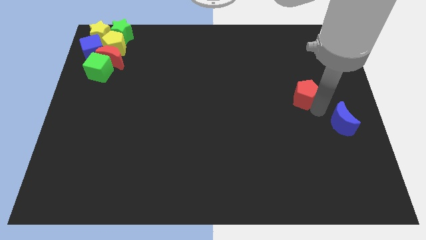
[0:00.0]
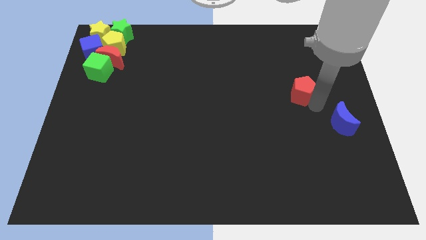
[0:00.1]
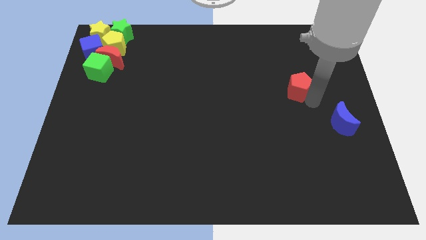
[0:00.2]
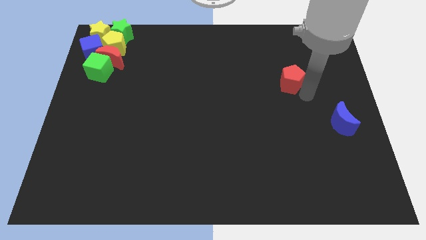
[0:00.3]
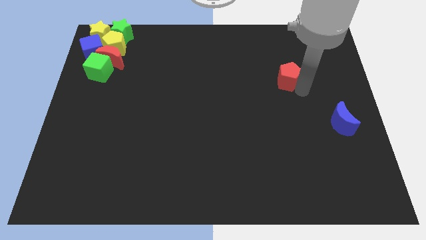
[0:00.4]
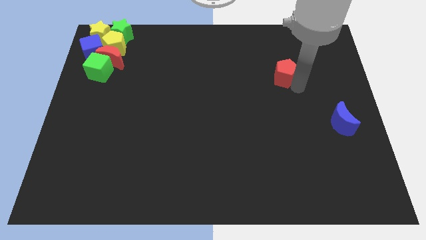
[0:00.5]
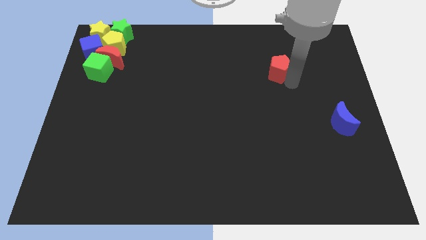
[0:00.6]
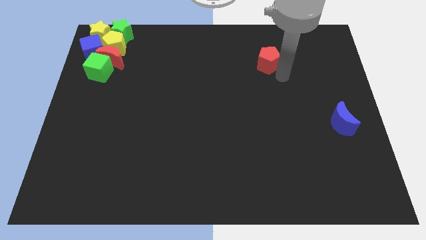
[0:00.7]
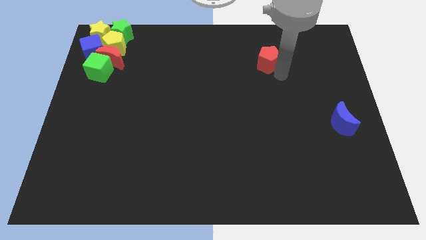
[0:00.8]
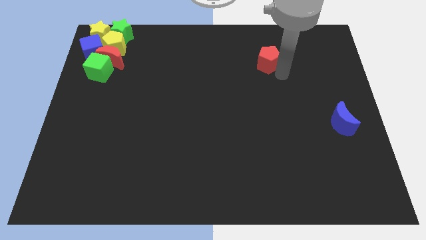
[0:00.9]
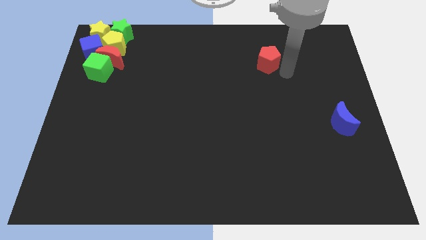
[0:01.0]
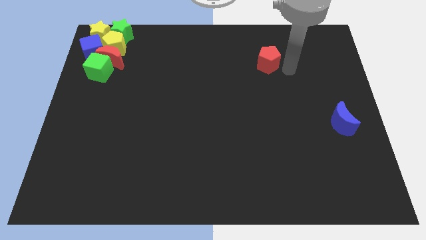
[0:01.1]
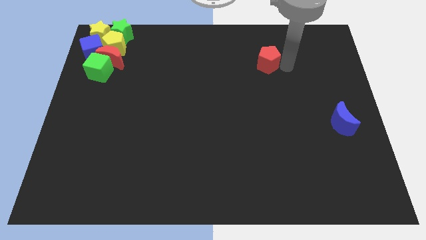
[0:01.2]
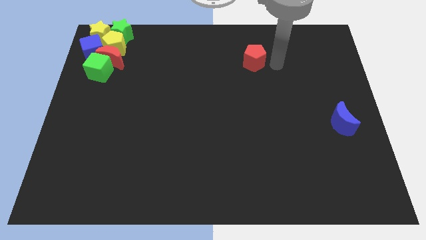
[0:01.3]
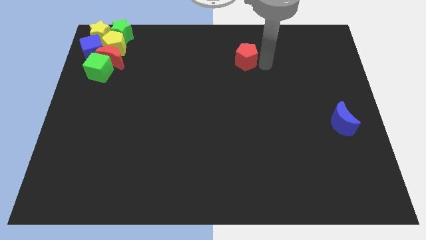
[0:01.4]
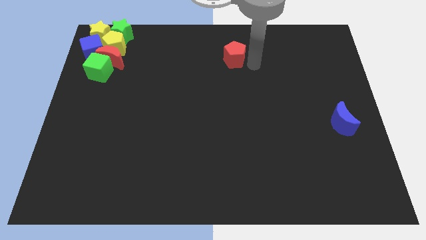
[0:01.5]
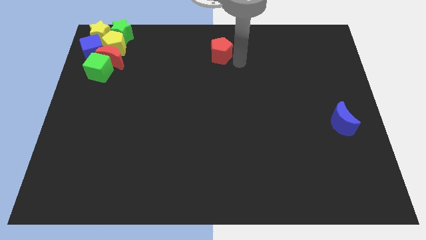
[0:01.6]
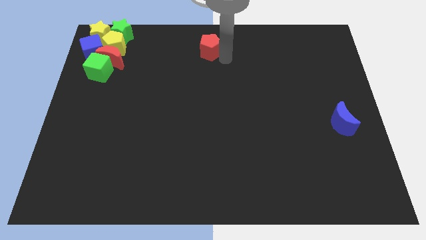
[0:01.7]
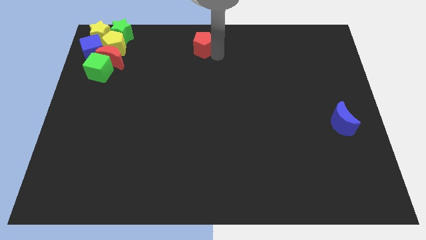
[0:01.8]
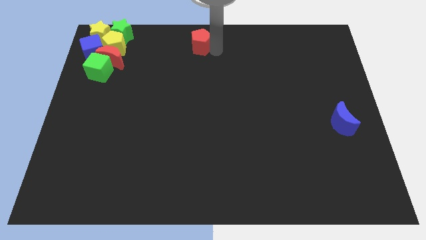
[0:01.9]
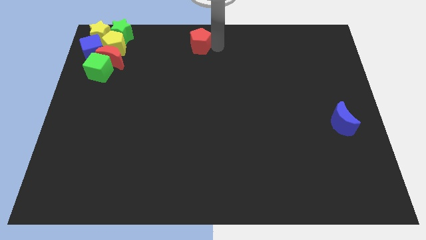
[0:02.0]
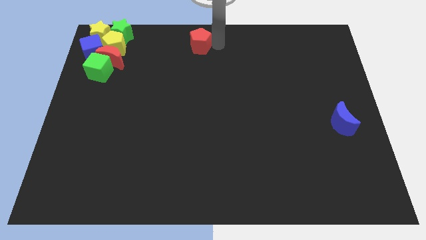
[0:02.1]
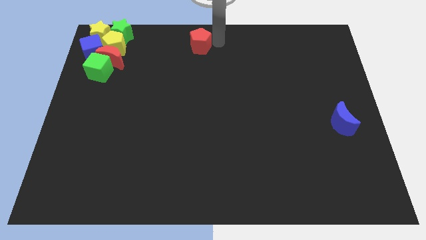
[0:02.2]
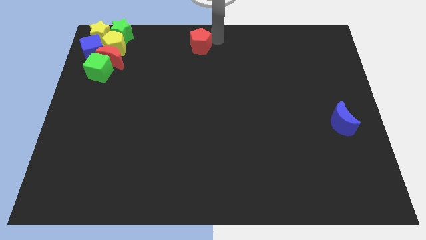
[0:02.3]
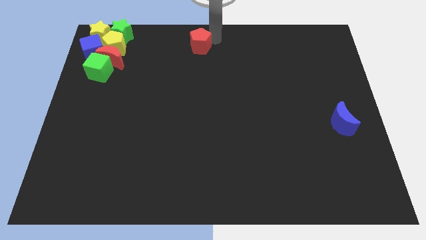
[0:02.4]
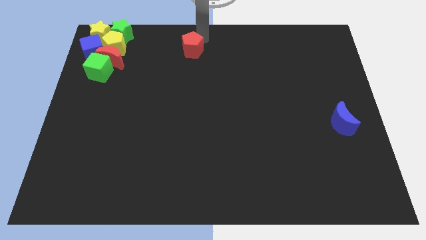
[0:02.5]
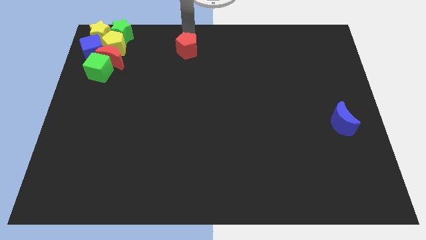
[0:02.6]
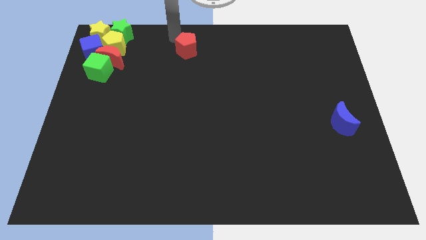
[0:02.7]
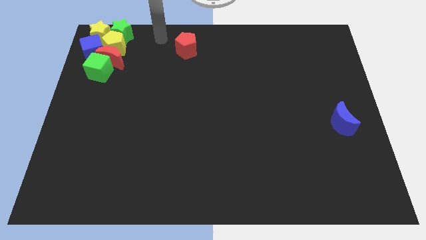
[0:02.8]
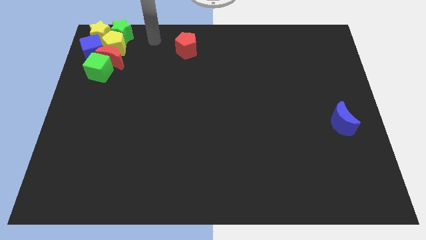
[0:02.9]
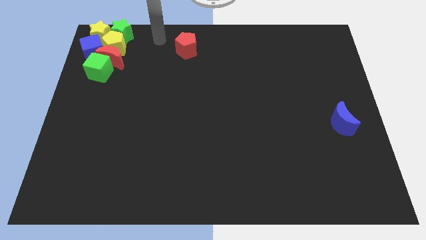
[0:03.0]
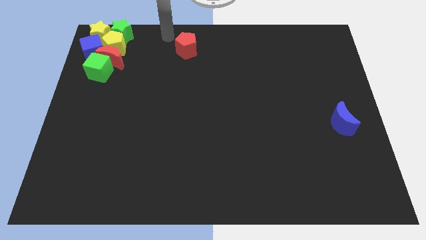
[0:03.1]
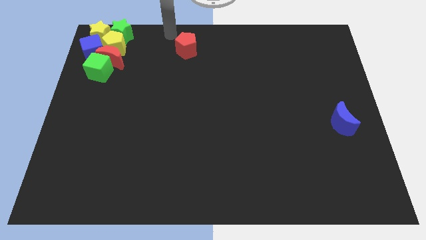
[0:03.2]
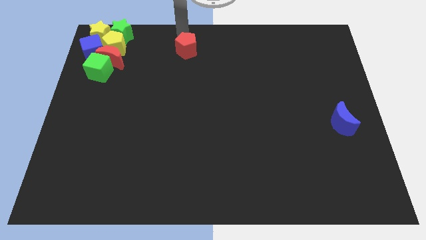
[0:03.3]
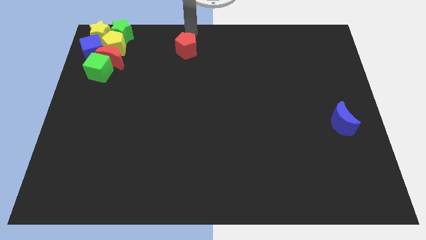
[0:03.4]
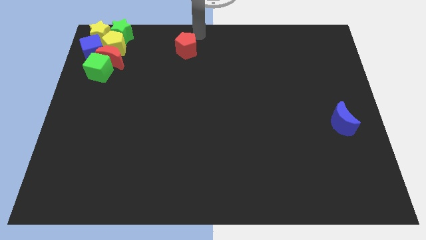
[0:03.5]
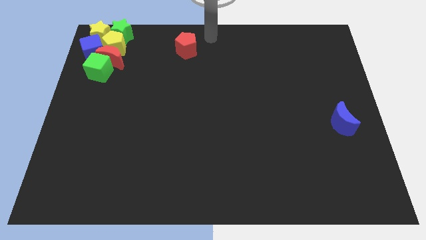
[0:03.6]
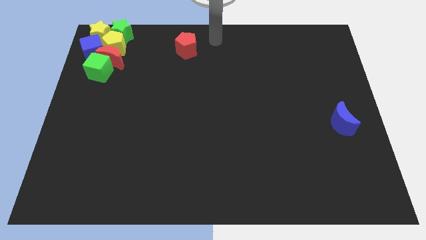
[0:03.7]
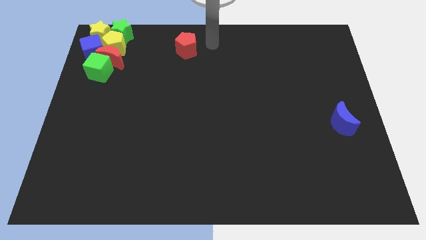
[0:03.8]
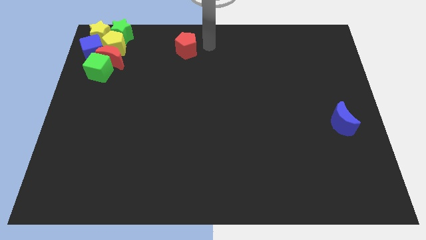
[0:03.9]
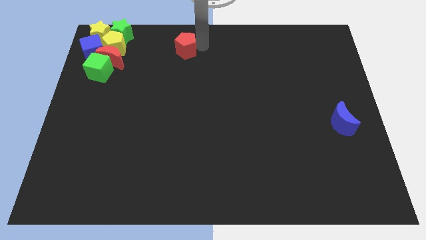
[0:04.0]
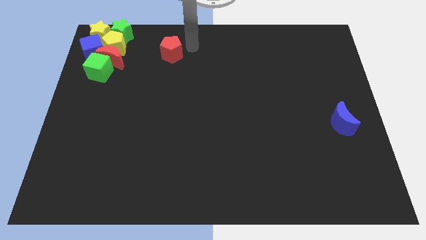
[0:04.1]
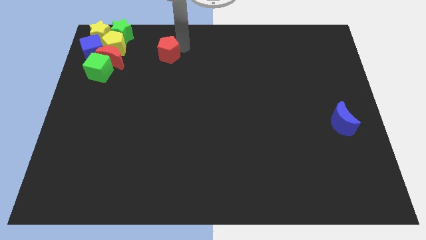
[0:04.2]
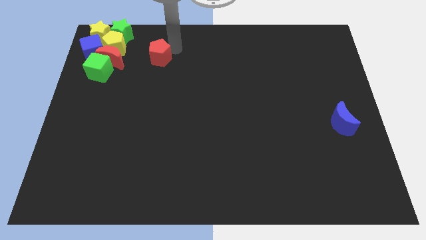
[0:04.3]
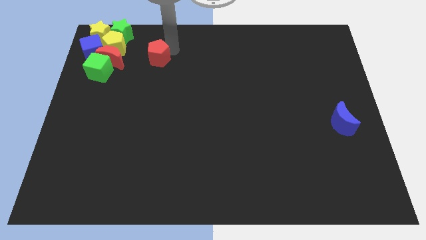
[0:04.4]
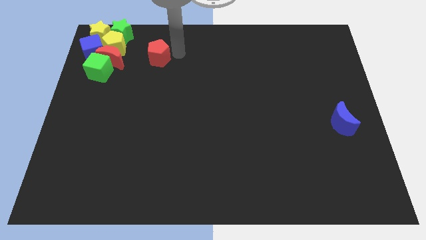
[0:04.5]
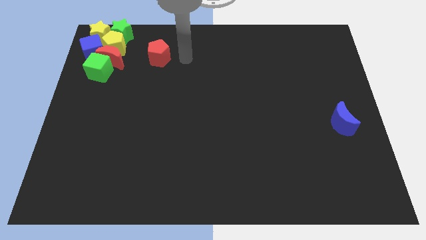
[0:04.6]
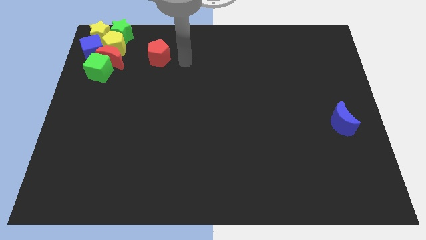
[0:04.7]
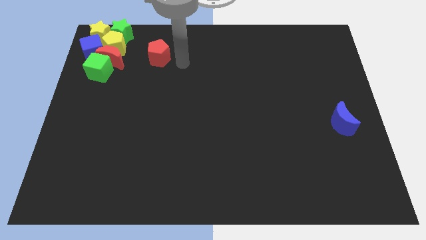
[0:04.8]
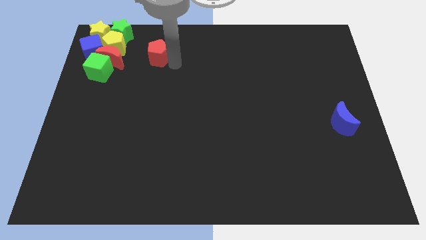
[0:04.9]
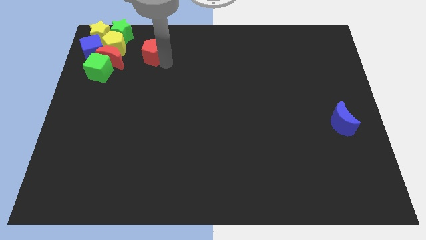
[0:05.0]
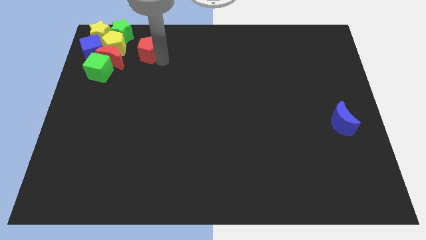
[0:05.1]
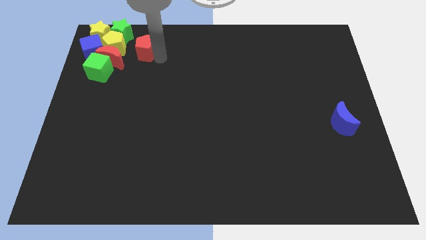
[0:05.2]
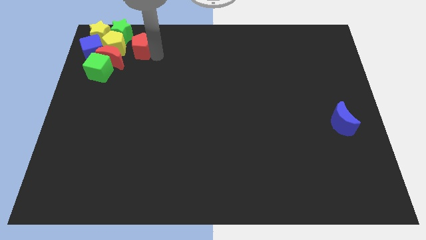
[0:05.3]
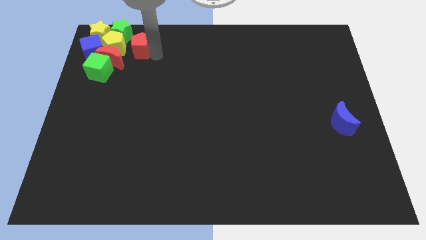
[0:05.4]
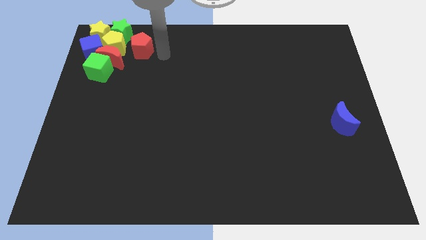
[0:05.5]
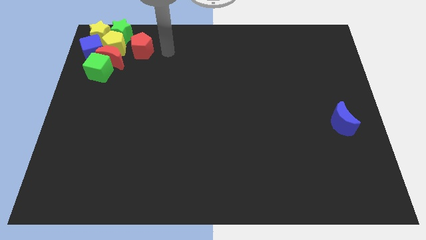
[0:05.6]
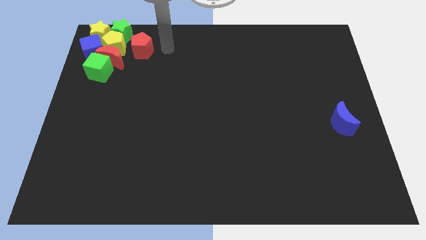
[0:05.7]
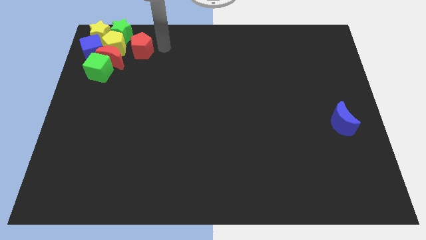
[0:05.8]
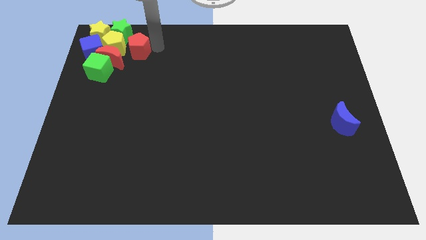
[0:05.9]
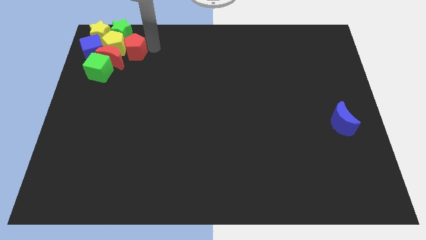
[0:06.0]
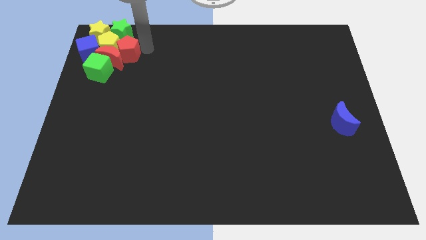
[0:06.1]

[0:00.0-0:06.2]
place the red pentagon right of the yellow pentagon

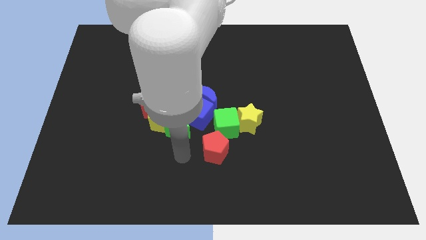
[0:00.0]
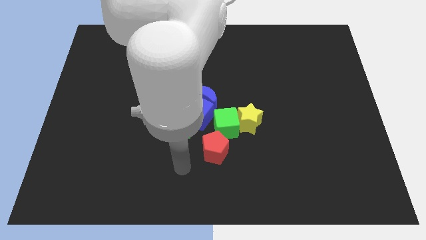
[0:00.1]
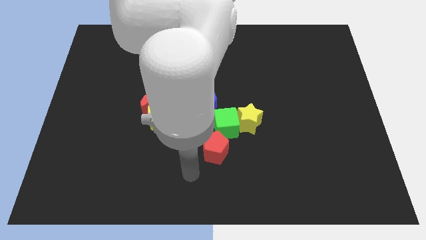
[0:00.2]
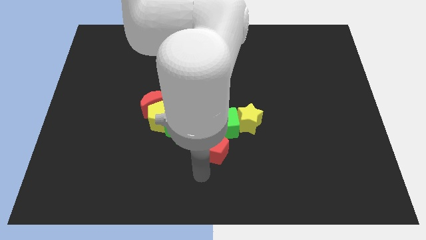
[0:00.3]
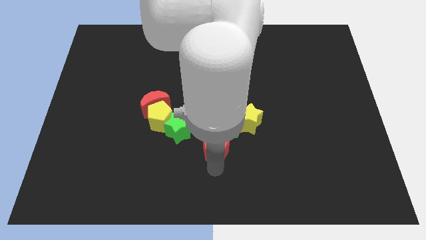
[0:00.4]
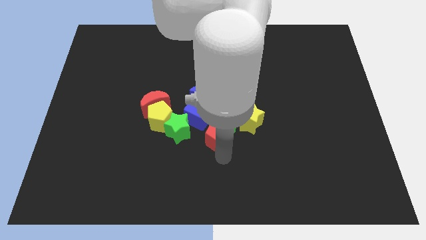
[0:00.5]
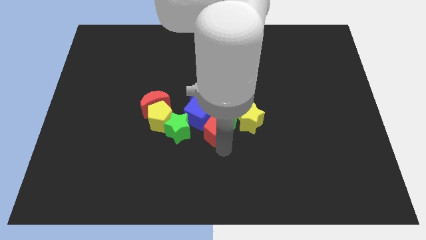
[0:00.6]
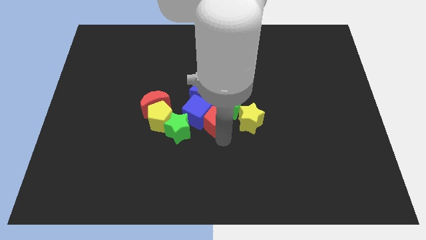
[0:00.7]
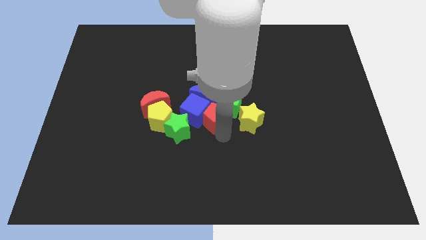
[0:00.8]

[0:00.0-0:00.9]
push the red pentagon into the green cube

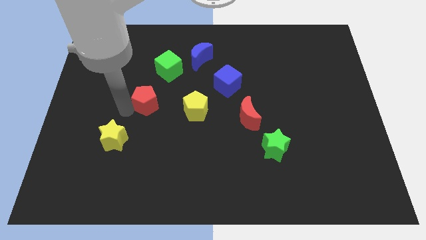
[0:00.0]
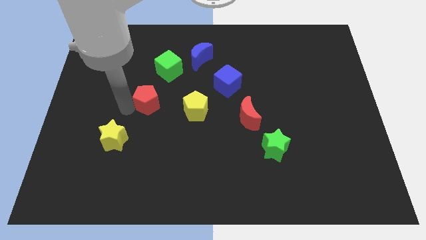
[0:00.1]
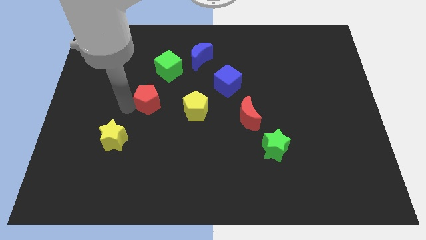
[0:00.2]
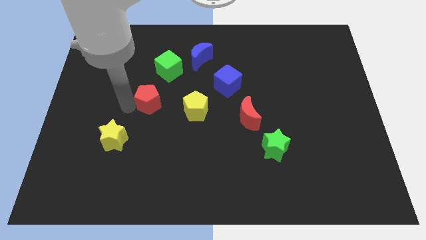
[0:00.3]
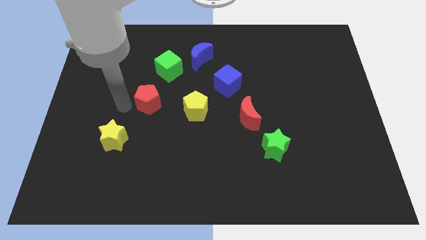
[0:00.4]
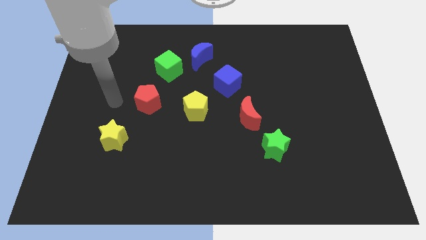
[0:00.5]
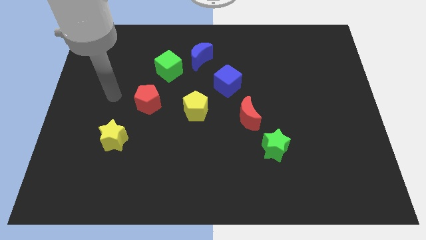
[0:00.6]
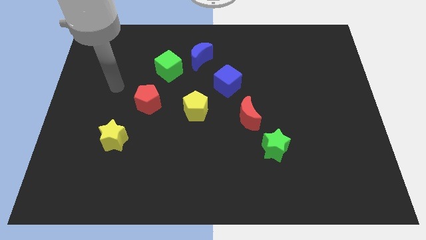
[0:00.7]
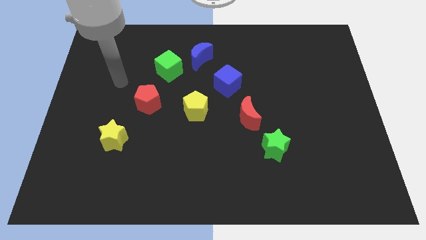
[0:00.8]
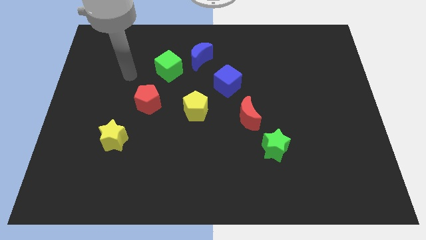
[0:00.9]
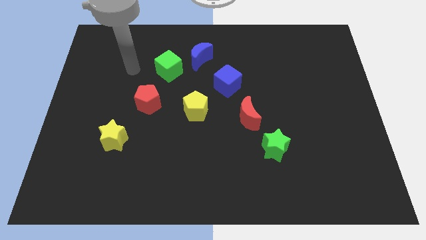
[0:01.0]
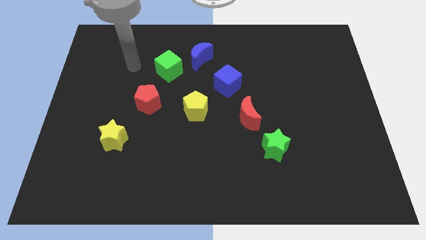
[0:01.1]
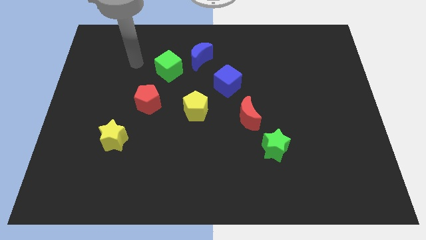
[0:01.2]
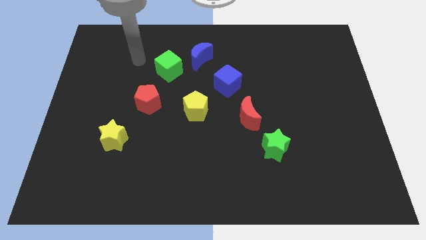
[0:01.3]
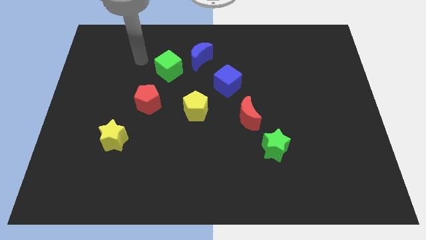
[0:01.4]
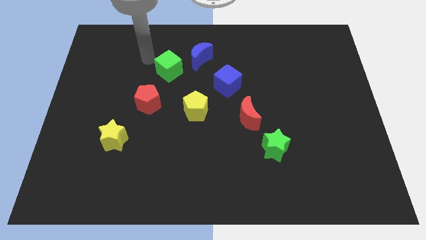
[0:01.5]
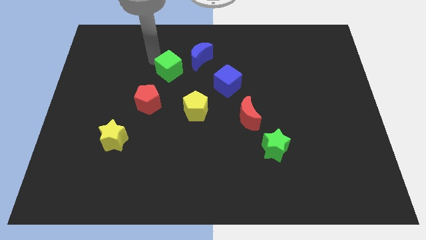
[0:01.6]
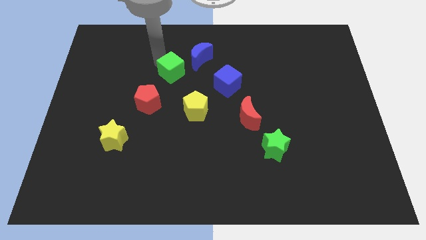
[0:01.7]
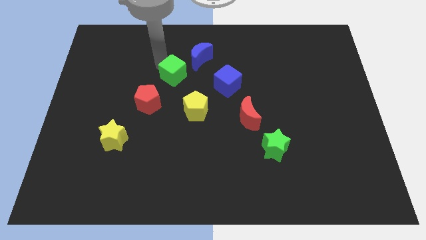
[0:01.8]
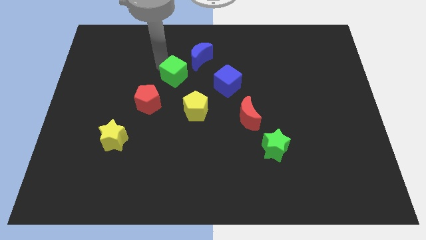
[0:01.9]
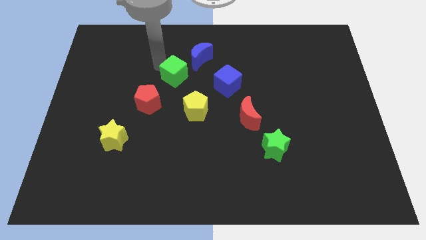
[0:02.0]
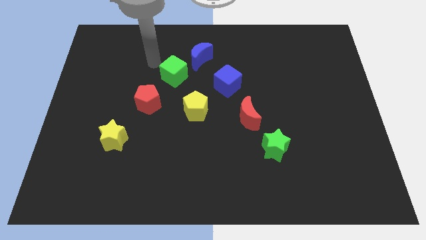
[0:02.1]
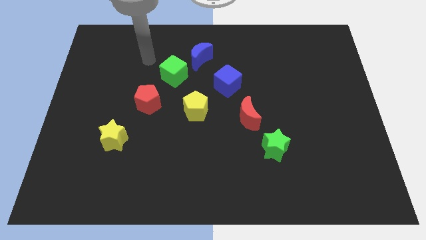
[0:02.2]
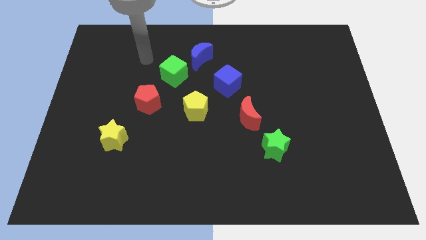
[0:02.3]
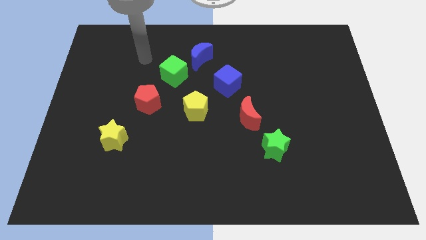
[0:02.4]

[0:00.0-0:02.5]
move the green cube in between blue moon and red pentagon
